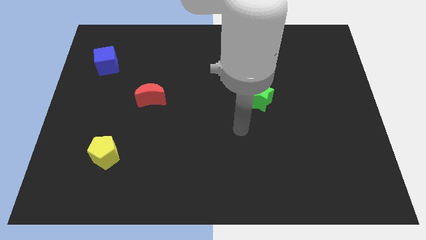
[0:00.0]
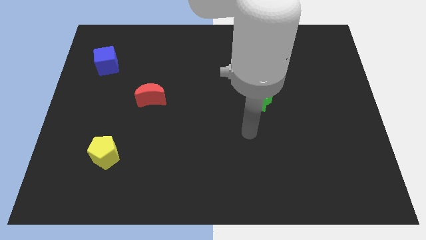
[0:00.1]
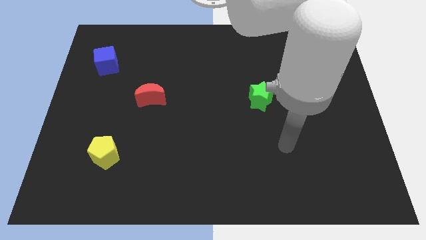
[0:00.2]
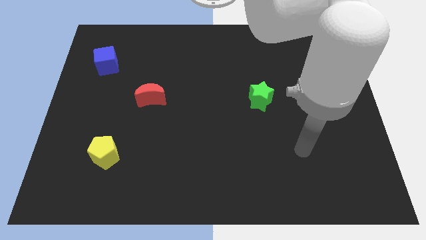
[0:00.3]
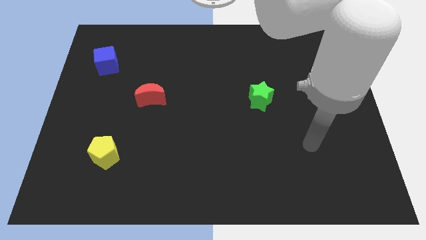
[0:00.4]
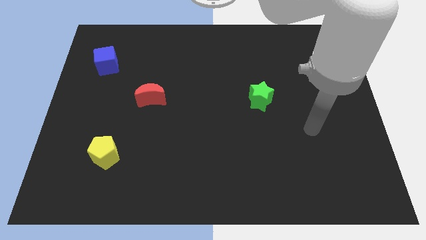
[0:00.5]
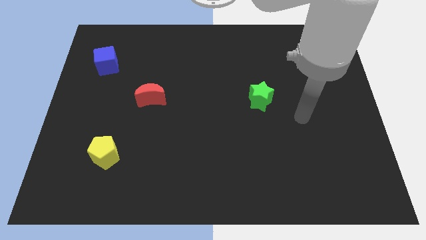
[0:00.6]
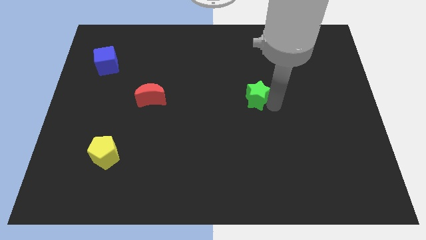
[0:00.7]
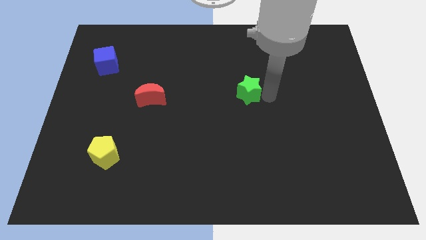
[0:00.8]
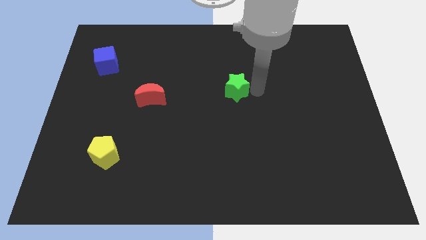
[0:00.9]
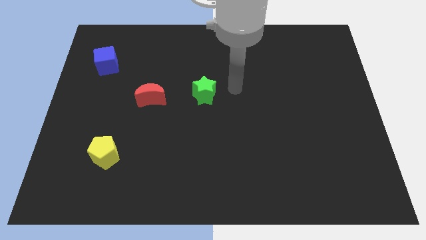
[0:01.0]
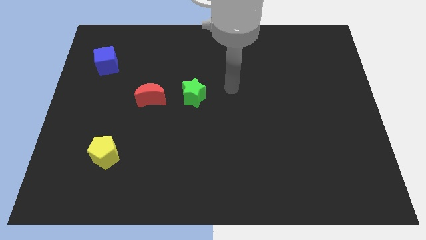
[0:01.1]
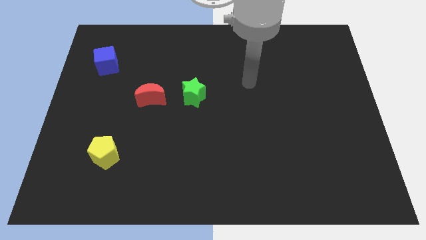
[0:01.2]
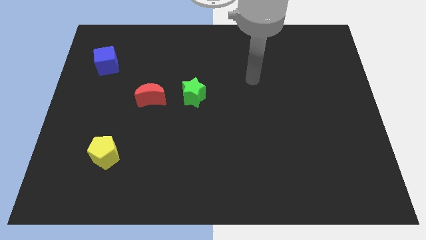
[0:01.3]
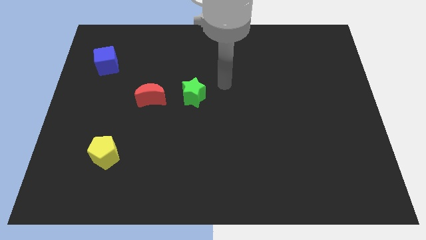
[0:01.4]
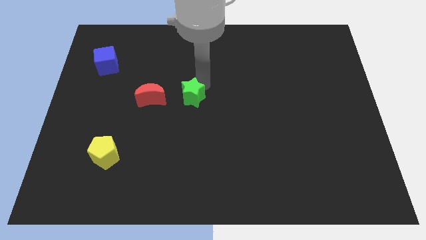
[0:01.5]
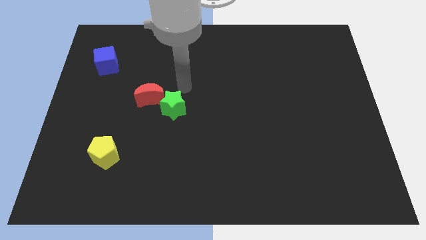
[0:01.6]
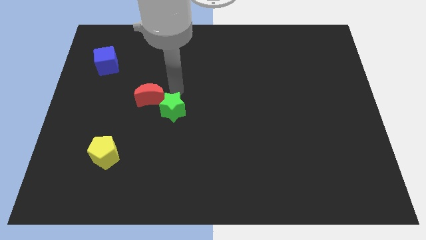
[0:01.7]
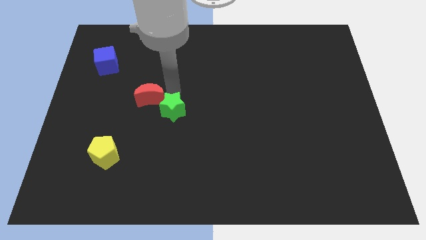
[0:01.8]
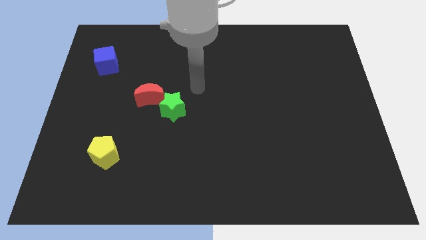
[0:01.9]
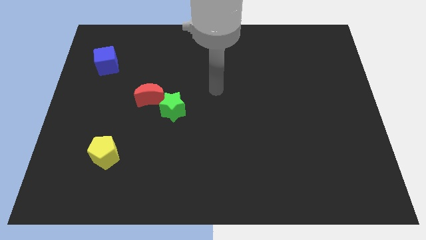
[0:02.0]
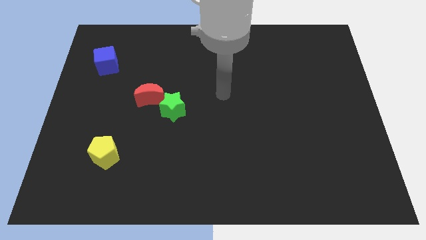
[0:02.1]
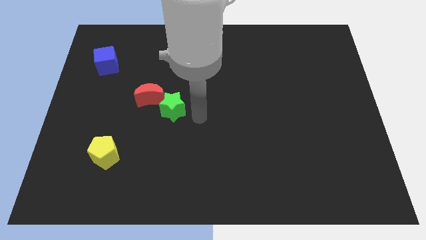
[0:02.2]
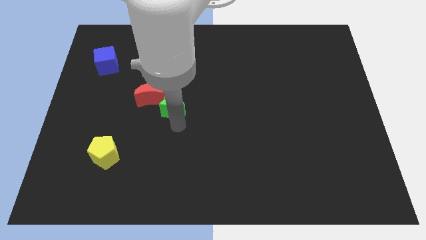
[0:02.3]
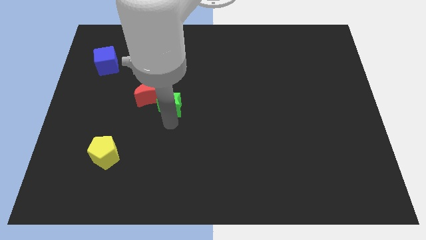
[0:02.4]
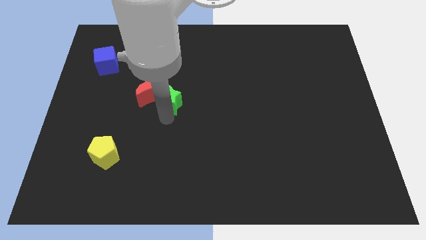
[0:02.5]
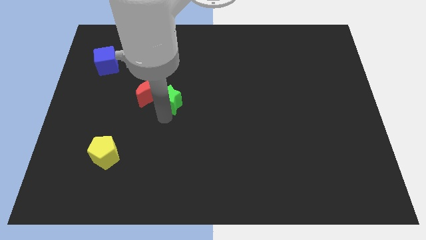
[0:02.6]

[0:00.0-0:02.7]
slide the green star next to the red moon

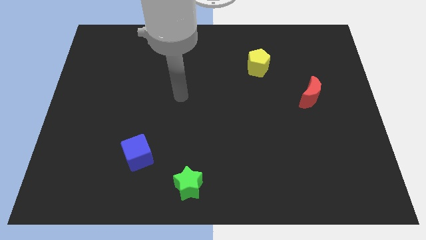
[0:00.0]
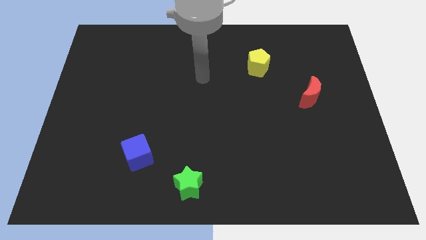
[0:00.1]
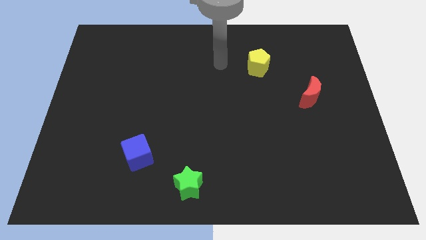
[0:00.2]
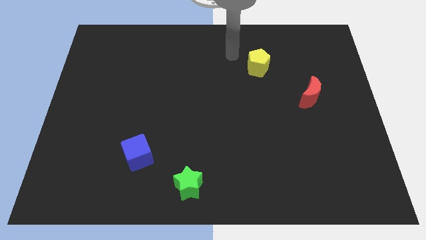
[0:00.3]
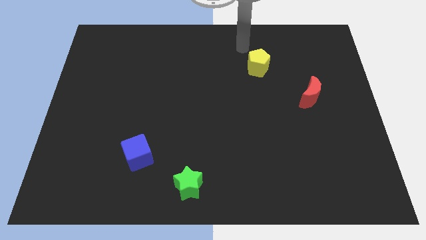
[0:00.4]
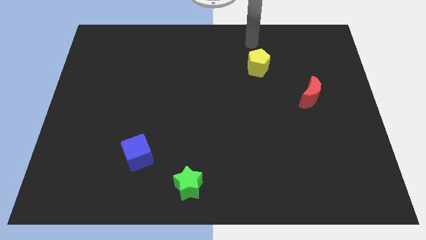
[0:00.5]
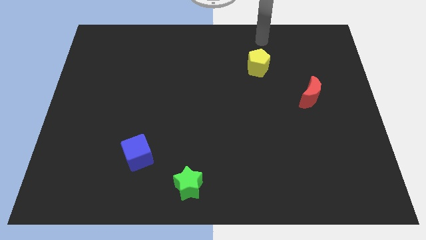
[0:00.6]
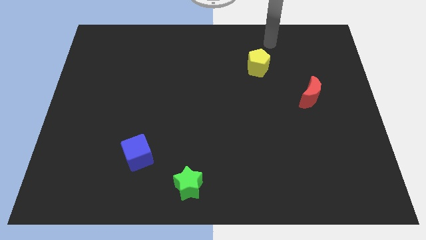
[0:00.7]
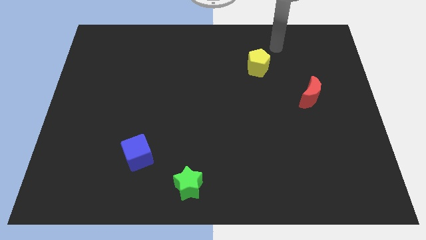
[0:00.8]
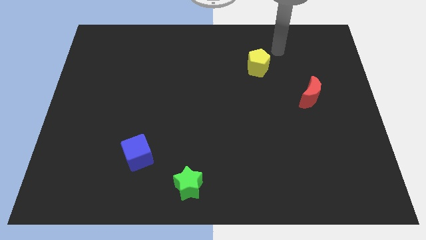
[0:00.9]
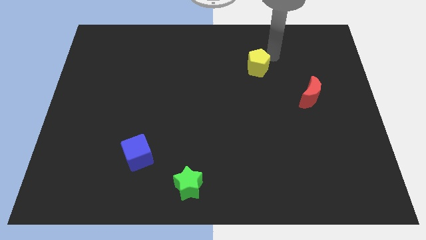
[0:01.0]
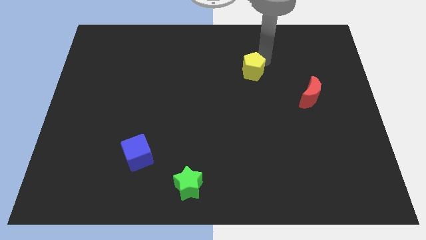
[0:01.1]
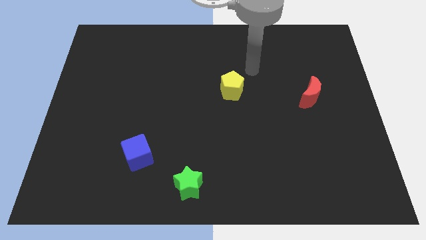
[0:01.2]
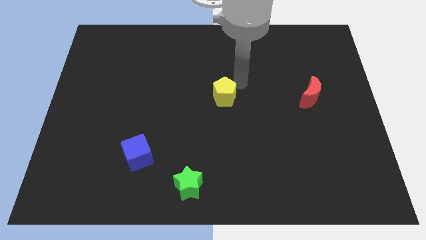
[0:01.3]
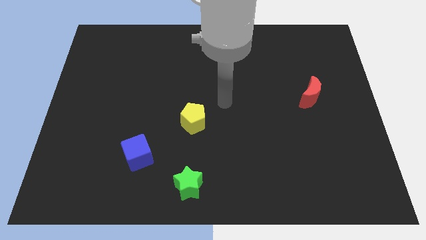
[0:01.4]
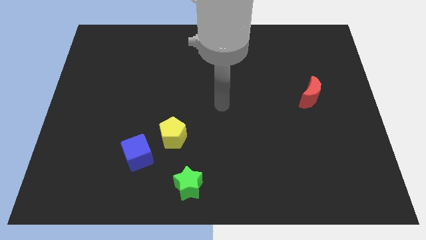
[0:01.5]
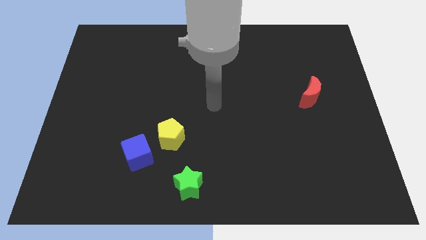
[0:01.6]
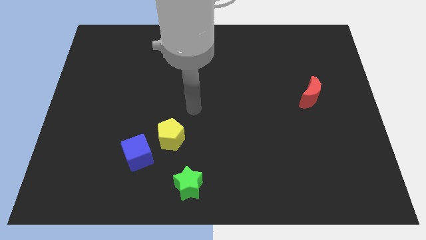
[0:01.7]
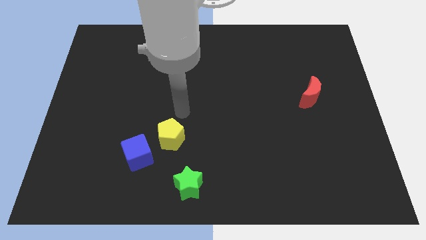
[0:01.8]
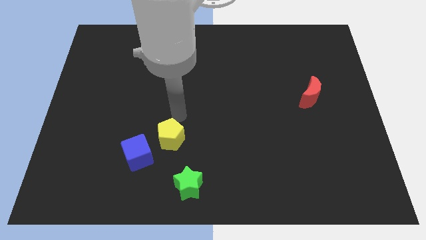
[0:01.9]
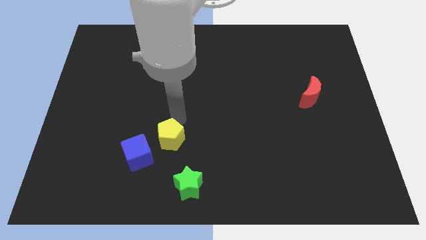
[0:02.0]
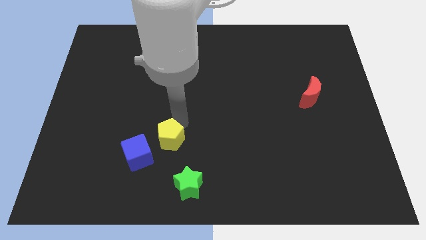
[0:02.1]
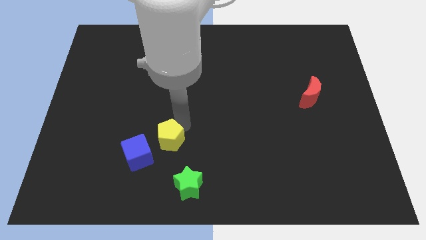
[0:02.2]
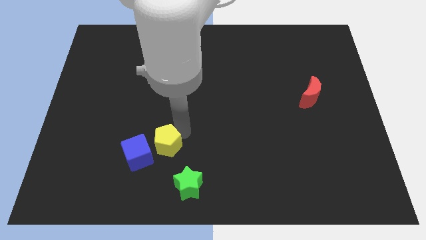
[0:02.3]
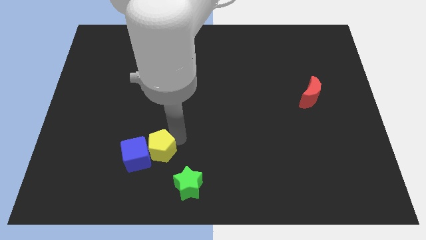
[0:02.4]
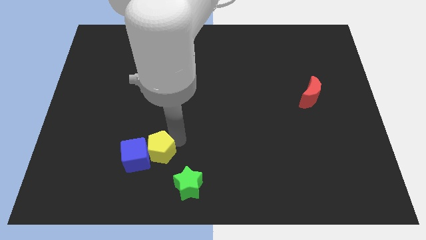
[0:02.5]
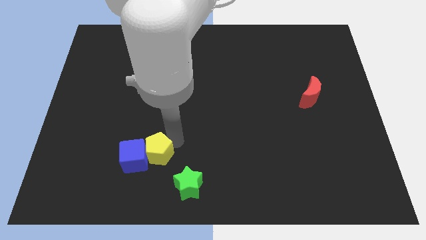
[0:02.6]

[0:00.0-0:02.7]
push the pentagon to the blue cube

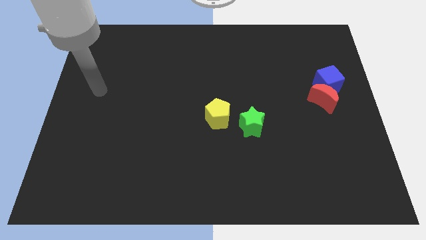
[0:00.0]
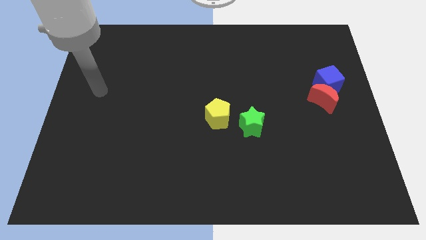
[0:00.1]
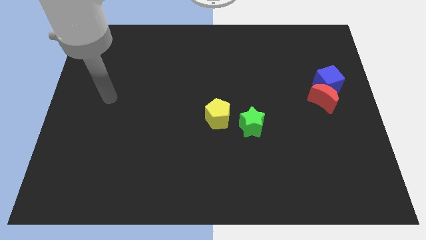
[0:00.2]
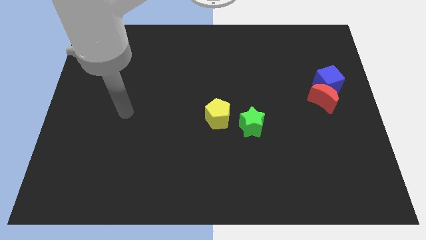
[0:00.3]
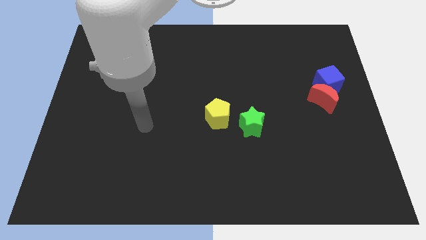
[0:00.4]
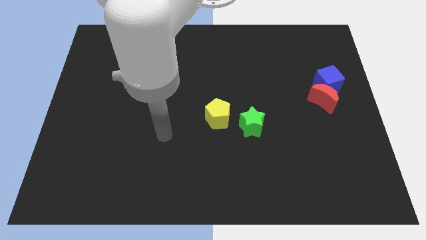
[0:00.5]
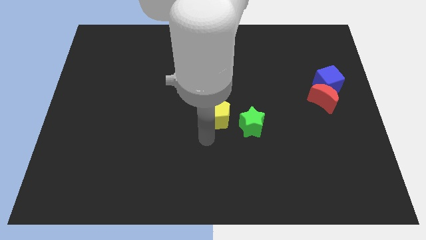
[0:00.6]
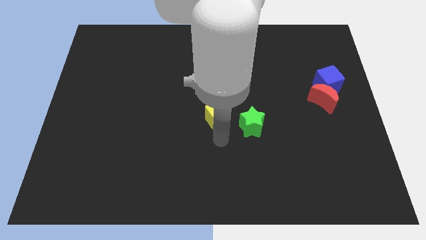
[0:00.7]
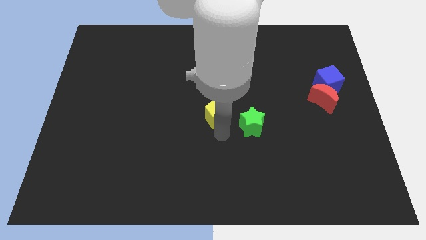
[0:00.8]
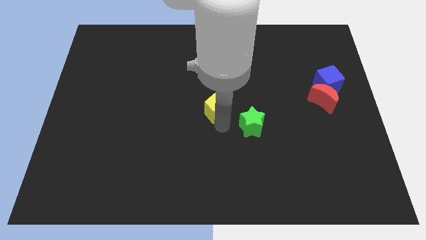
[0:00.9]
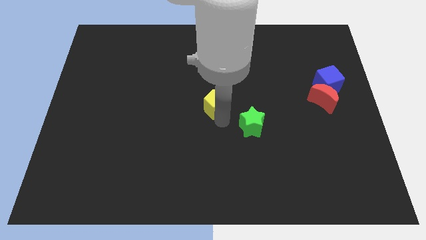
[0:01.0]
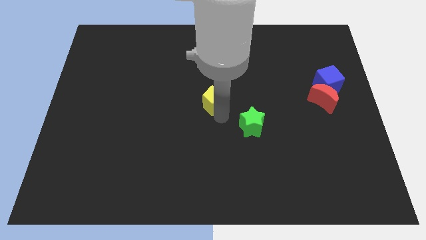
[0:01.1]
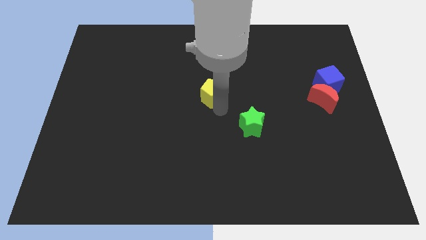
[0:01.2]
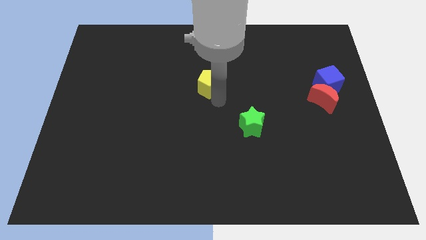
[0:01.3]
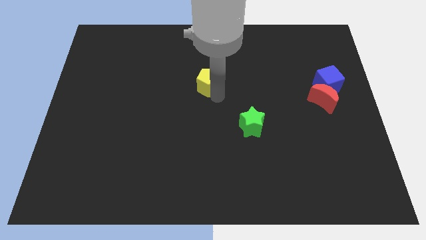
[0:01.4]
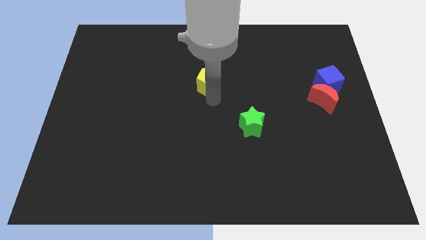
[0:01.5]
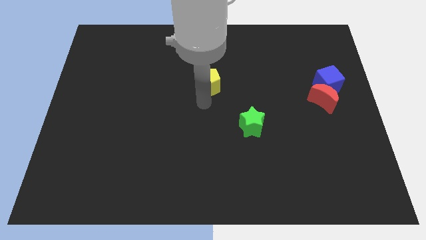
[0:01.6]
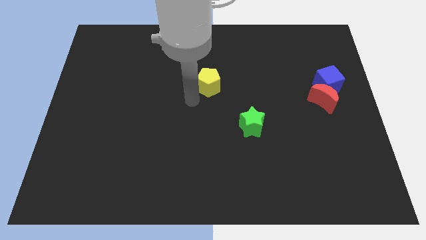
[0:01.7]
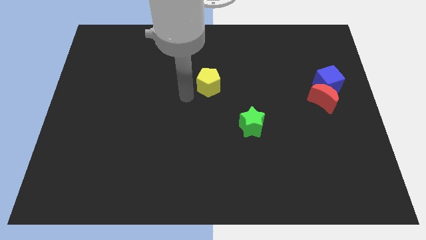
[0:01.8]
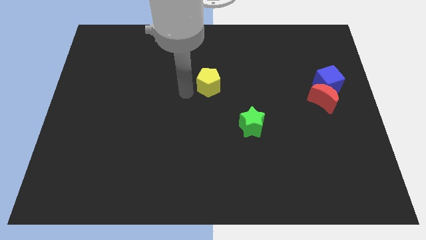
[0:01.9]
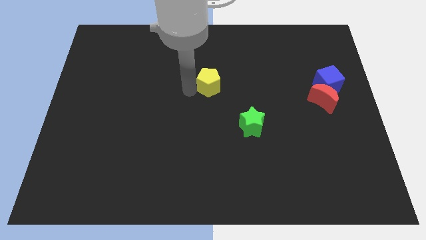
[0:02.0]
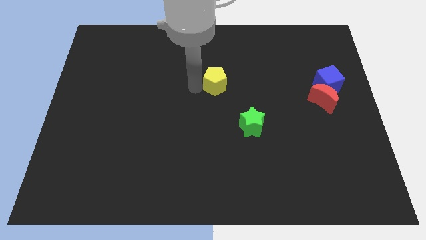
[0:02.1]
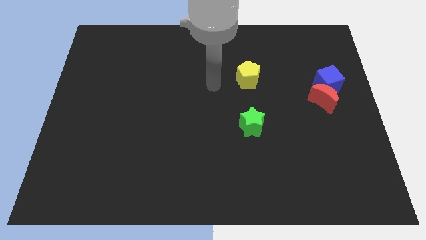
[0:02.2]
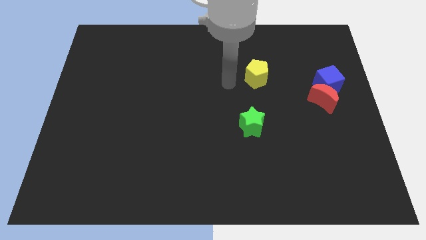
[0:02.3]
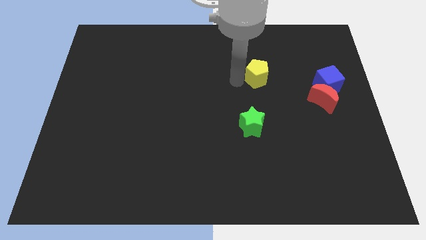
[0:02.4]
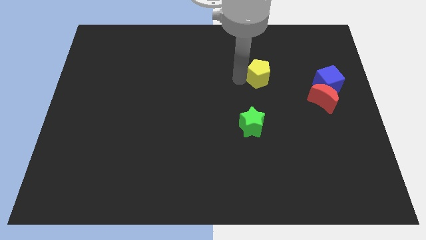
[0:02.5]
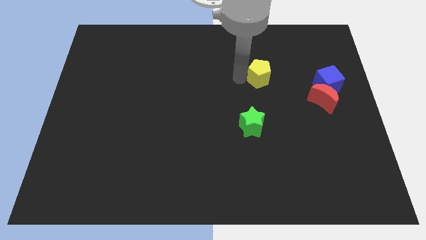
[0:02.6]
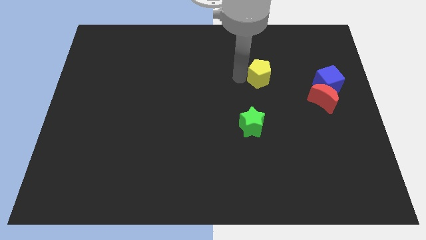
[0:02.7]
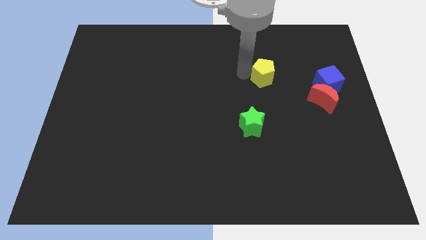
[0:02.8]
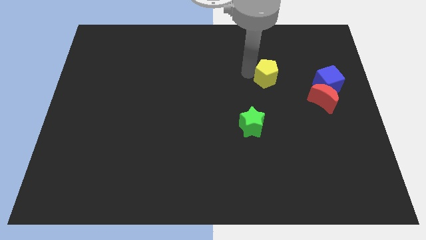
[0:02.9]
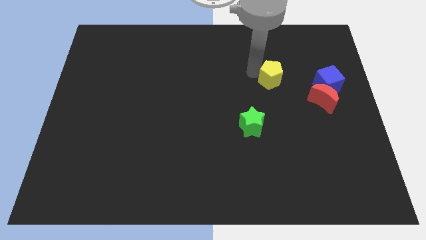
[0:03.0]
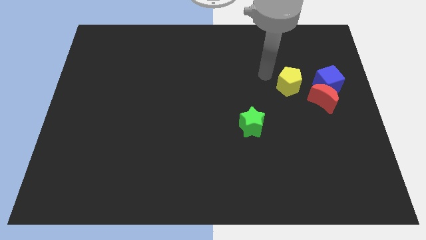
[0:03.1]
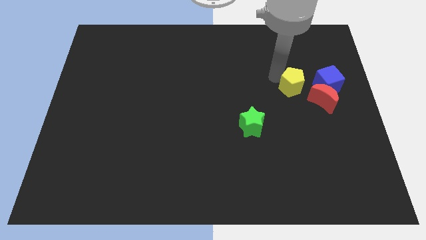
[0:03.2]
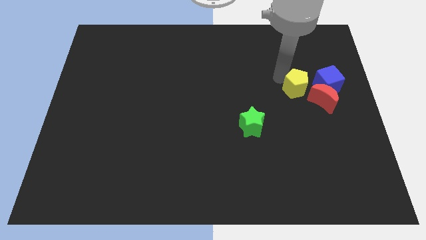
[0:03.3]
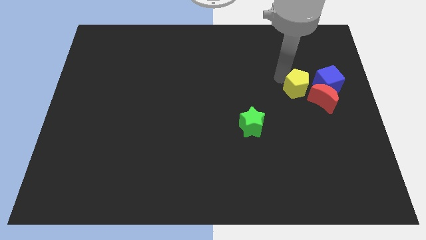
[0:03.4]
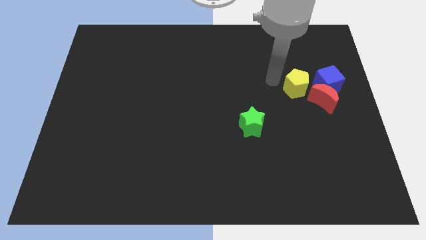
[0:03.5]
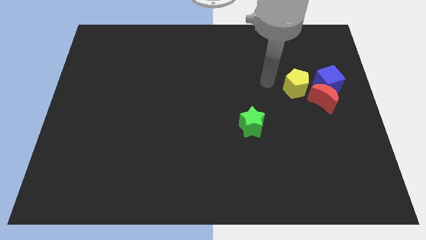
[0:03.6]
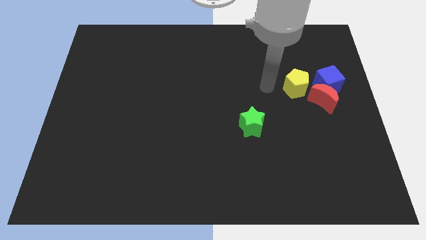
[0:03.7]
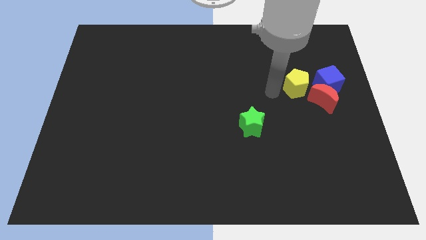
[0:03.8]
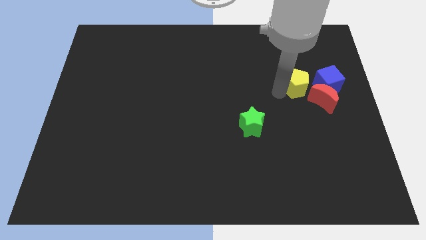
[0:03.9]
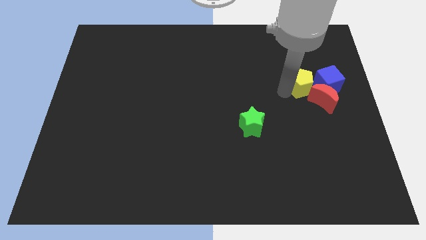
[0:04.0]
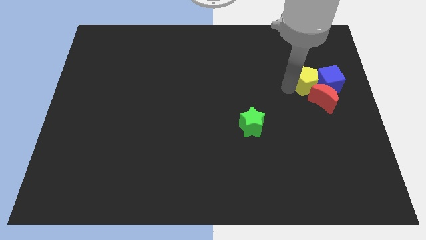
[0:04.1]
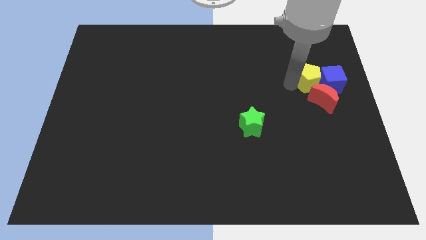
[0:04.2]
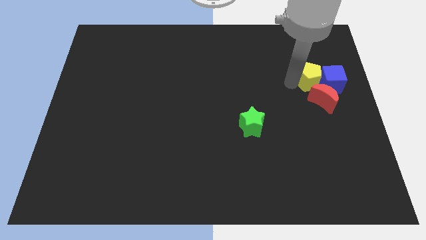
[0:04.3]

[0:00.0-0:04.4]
push the yellow pentagon next to the blue block
